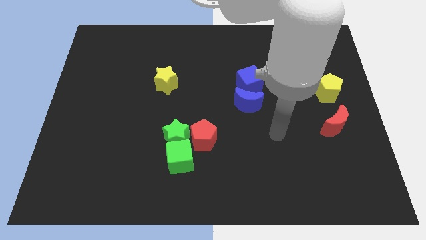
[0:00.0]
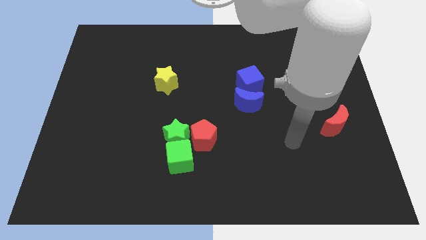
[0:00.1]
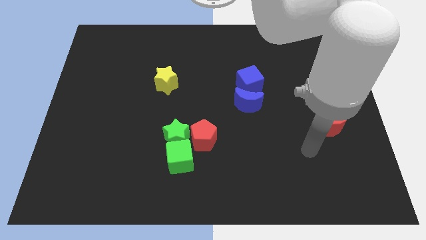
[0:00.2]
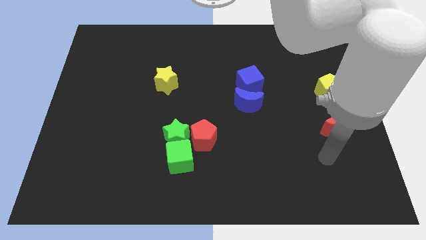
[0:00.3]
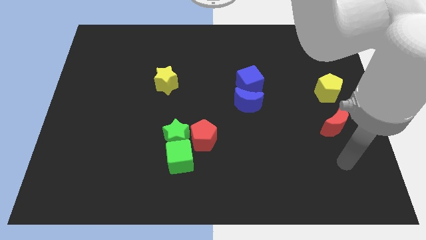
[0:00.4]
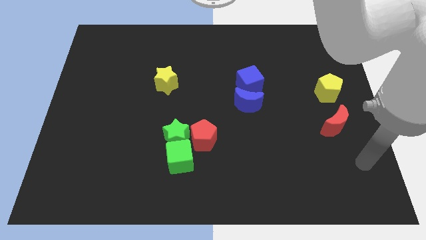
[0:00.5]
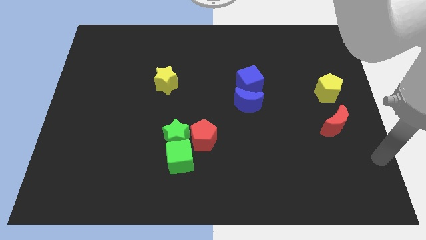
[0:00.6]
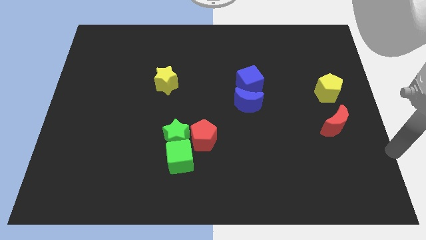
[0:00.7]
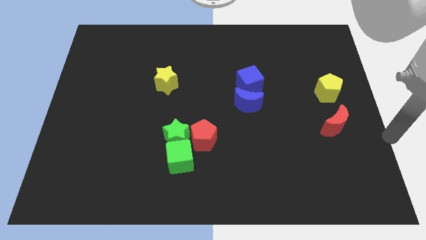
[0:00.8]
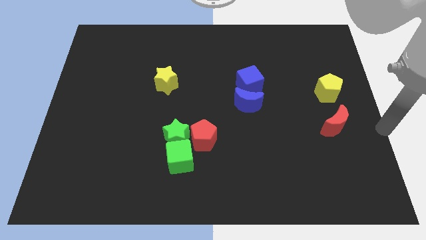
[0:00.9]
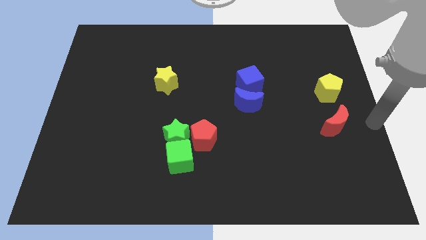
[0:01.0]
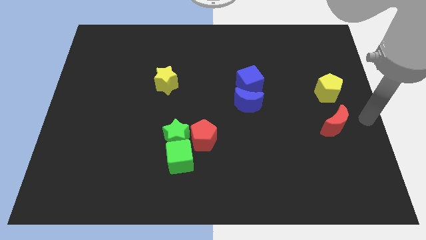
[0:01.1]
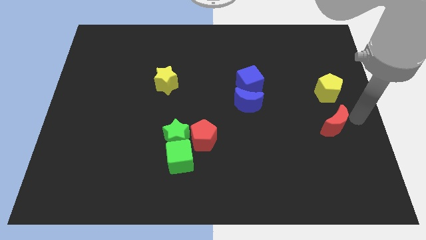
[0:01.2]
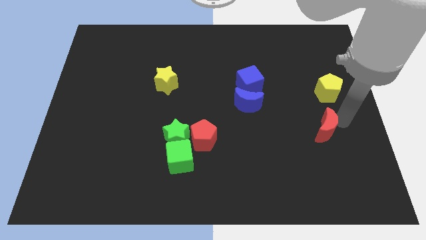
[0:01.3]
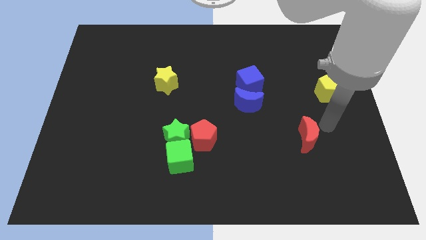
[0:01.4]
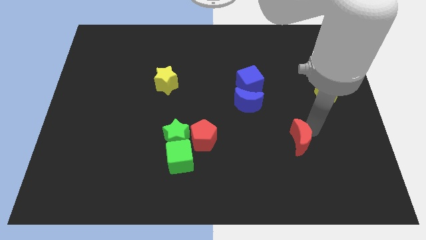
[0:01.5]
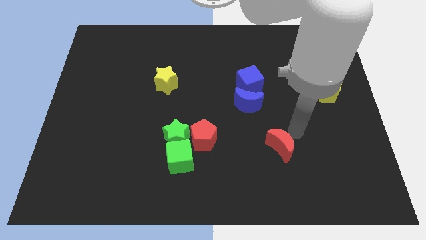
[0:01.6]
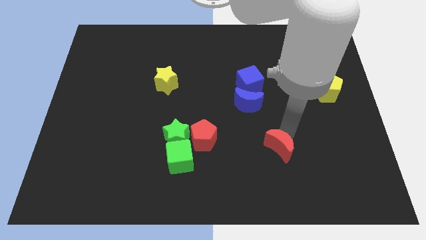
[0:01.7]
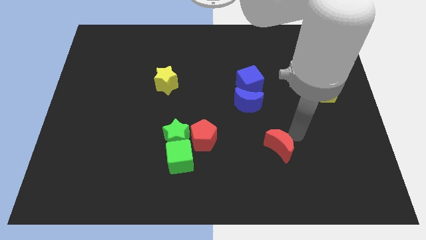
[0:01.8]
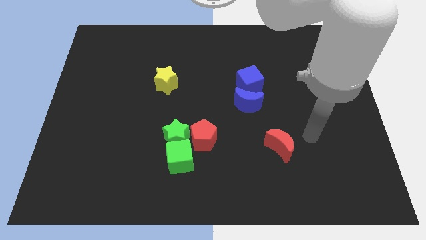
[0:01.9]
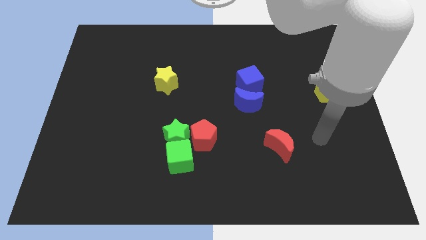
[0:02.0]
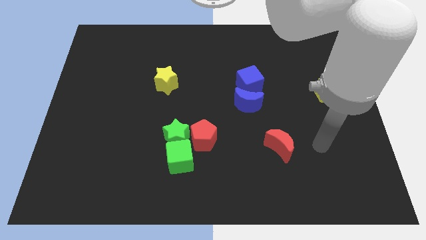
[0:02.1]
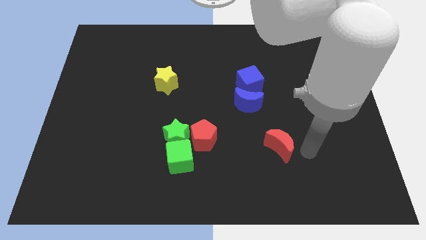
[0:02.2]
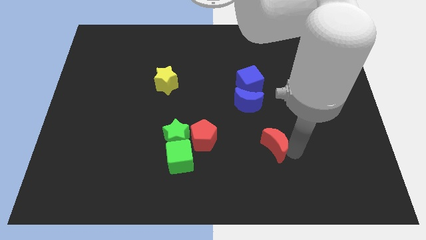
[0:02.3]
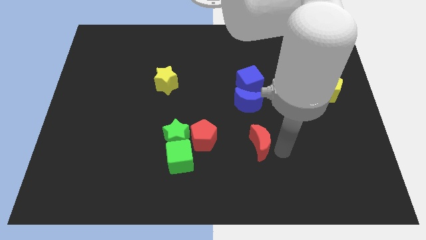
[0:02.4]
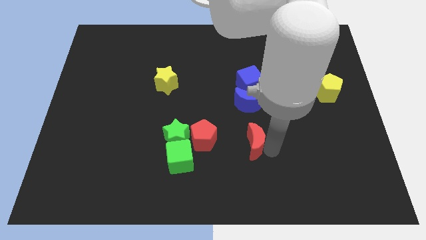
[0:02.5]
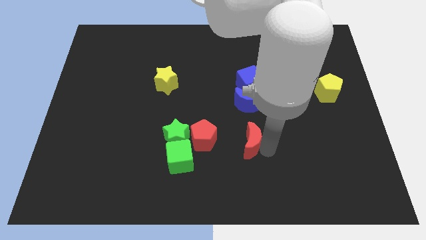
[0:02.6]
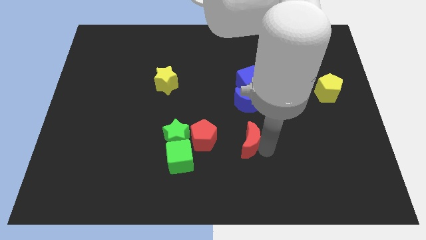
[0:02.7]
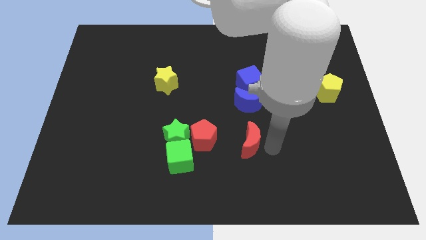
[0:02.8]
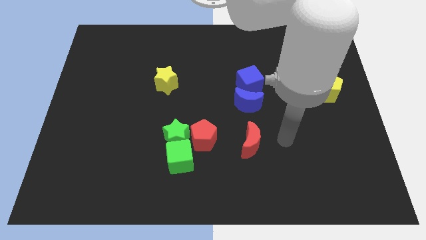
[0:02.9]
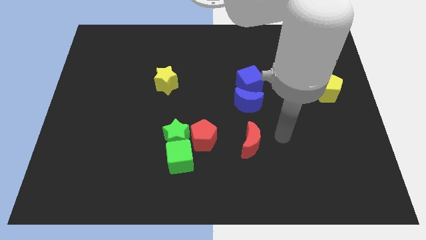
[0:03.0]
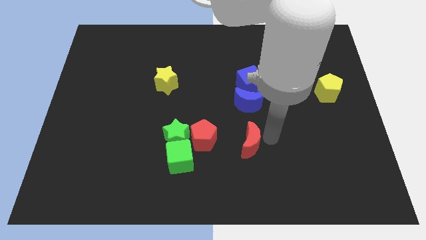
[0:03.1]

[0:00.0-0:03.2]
place red moon parallel right to red pentagon

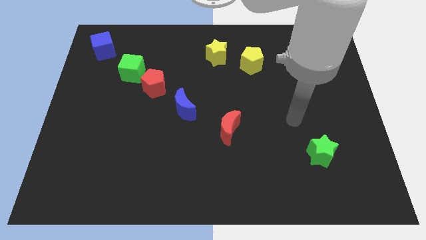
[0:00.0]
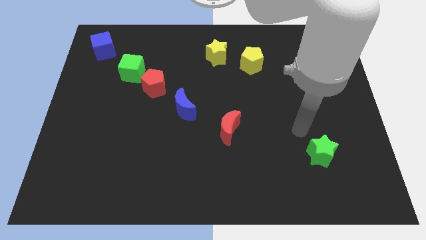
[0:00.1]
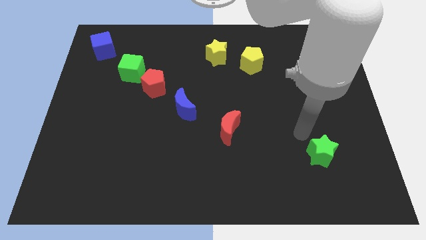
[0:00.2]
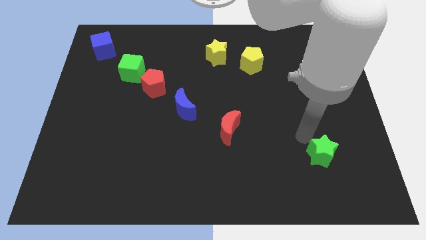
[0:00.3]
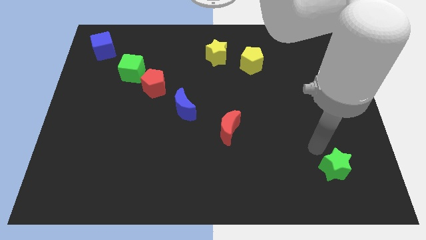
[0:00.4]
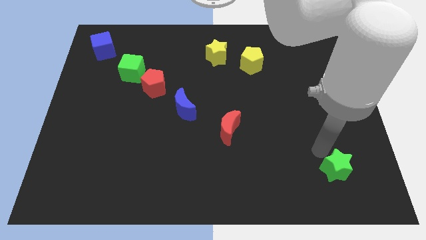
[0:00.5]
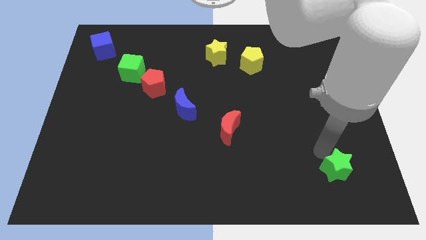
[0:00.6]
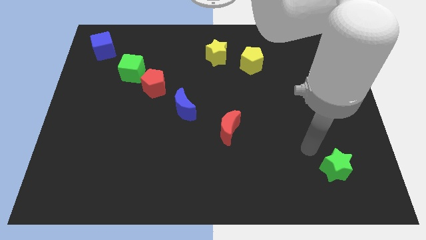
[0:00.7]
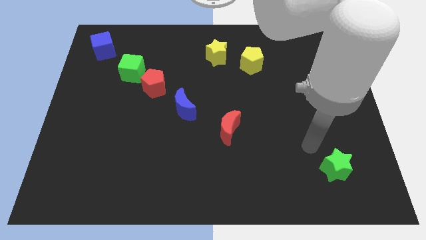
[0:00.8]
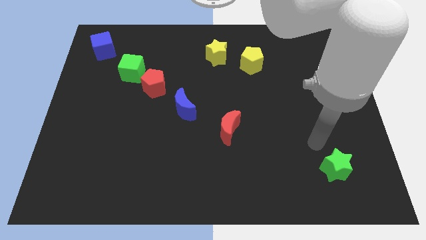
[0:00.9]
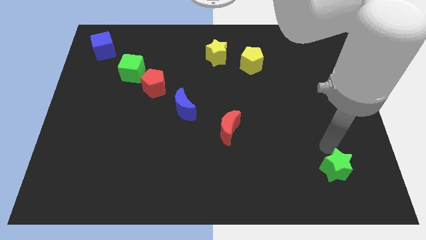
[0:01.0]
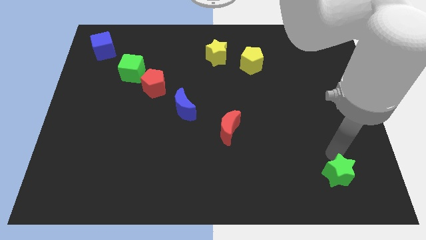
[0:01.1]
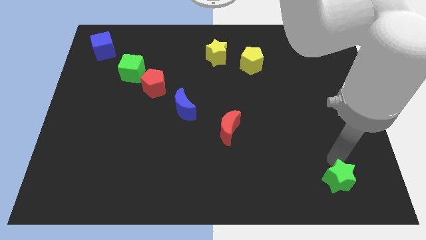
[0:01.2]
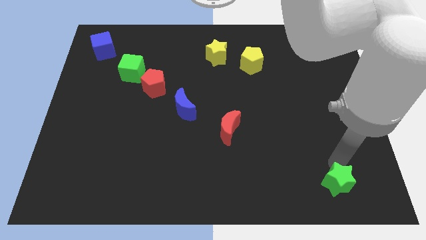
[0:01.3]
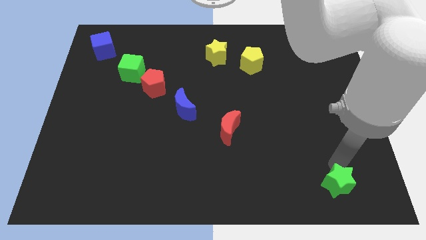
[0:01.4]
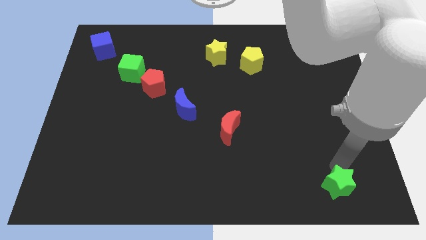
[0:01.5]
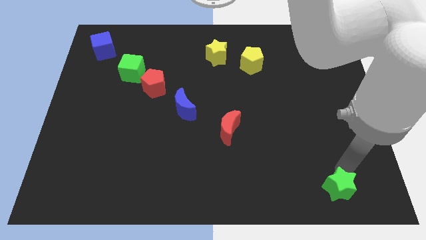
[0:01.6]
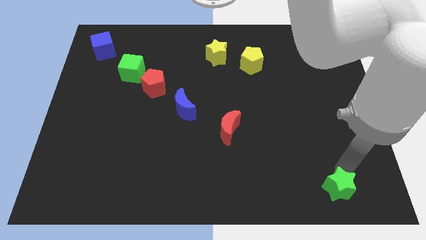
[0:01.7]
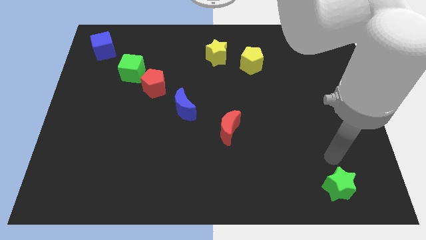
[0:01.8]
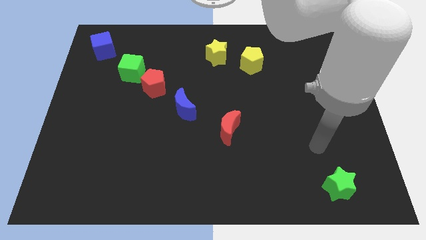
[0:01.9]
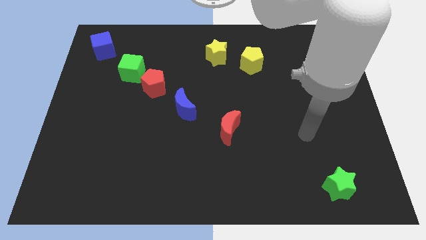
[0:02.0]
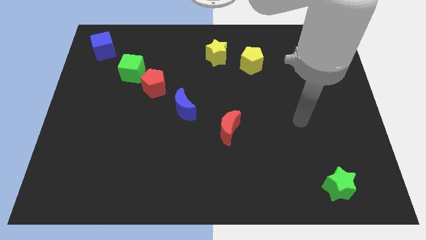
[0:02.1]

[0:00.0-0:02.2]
push the green star downward

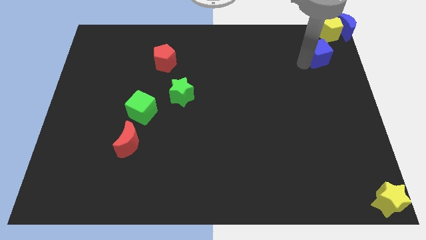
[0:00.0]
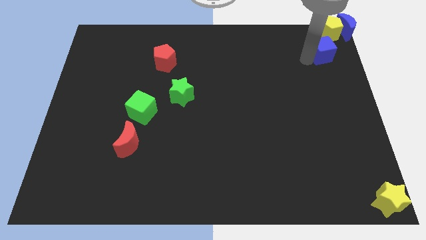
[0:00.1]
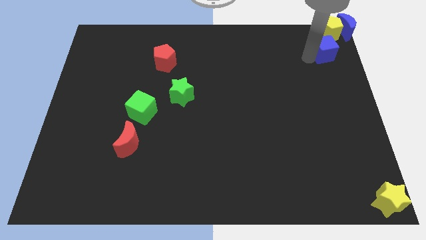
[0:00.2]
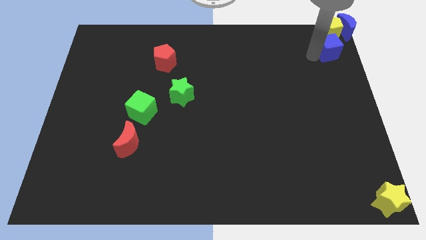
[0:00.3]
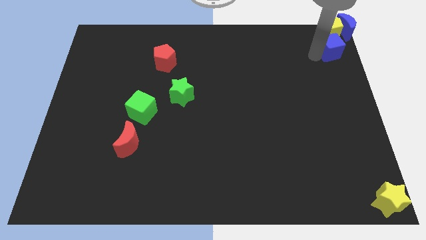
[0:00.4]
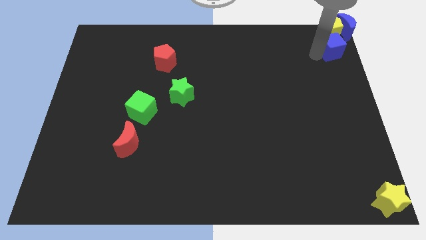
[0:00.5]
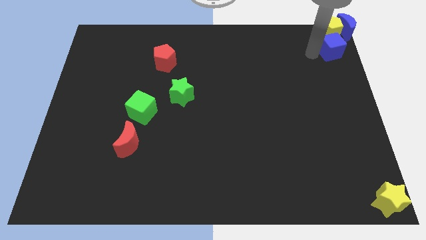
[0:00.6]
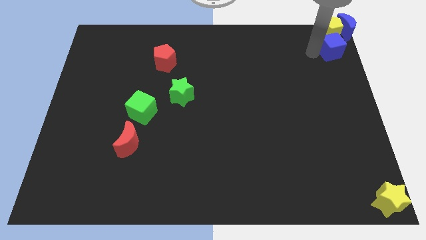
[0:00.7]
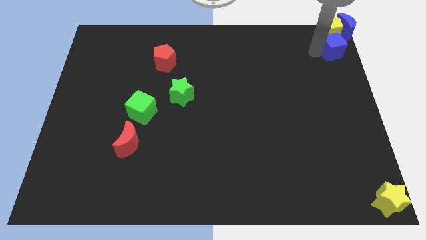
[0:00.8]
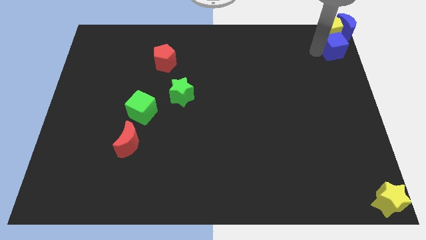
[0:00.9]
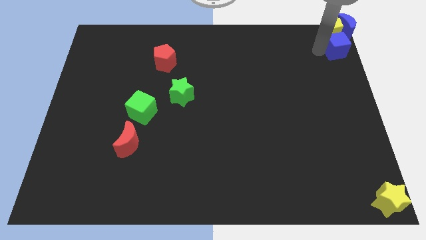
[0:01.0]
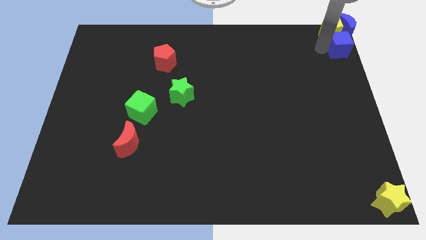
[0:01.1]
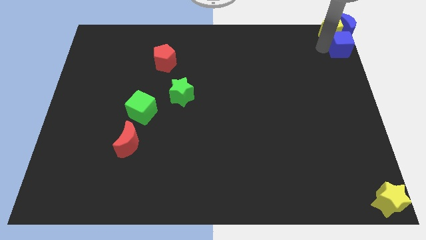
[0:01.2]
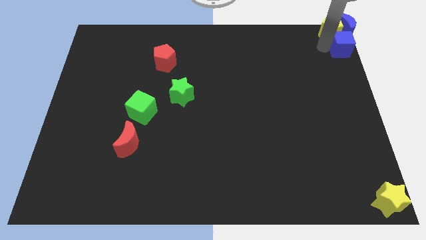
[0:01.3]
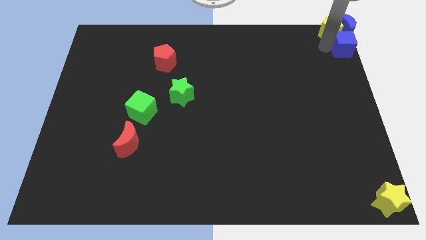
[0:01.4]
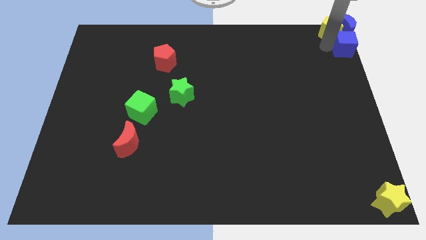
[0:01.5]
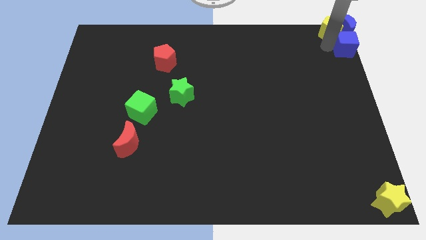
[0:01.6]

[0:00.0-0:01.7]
move the blue cube to the bottom of the yellow pentagon

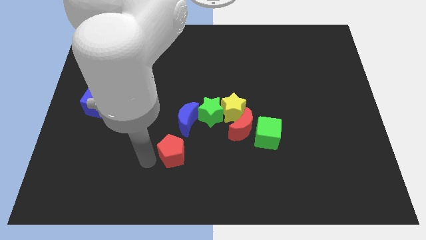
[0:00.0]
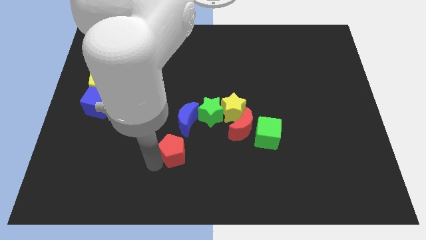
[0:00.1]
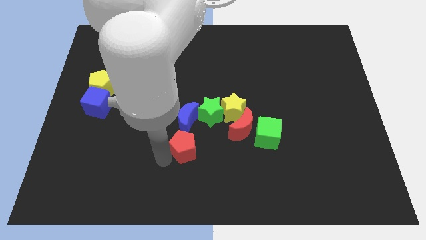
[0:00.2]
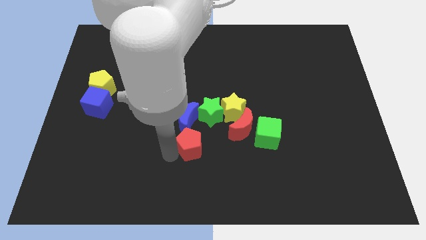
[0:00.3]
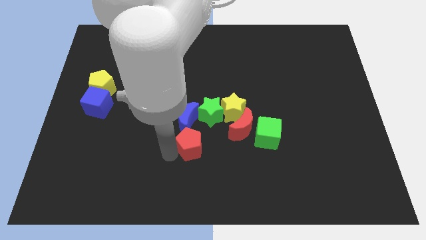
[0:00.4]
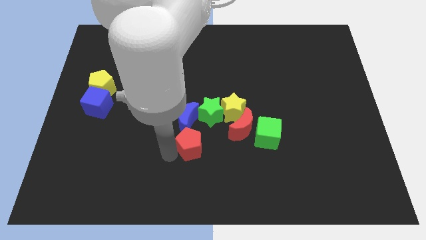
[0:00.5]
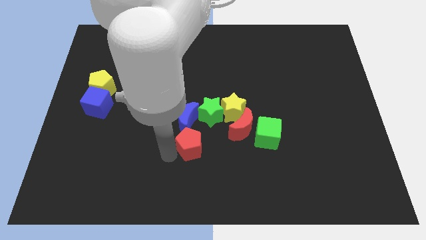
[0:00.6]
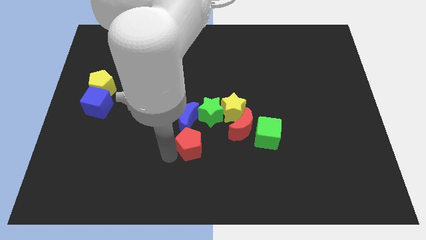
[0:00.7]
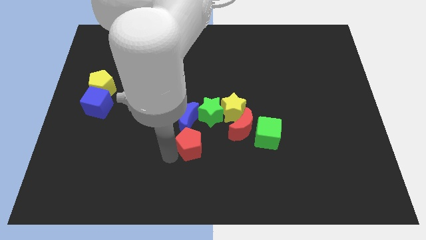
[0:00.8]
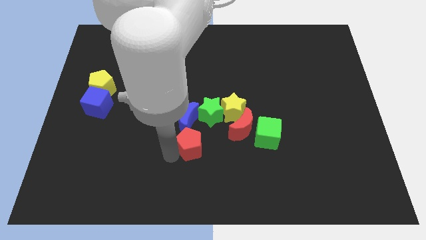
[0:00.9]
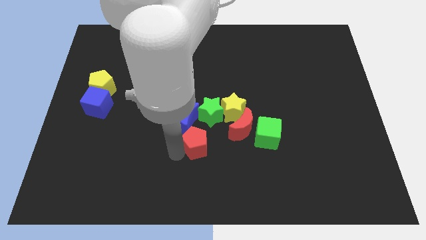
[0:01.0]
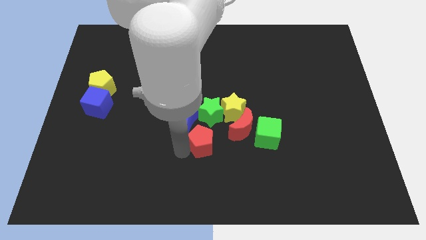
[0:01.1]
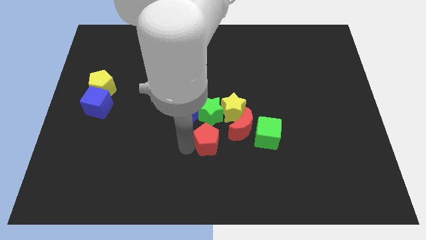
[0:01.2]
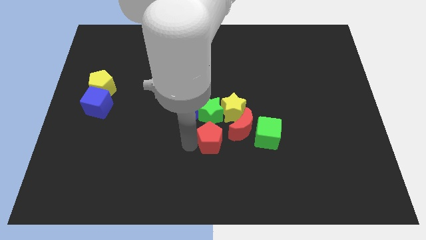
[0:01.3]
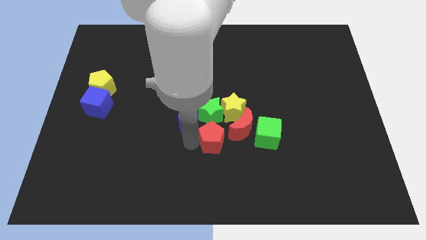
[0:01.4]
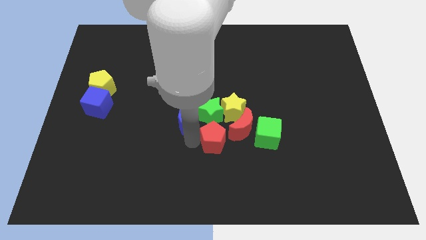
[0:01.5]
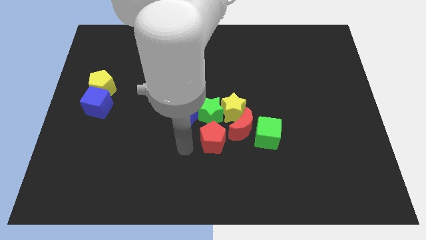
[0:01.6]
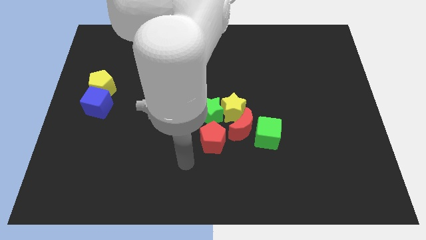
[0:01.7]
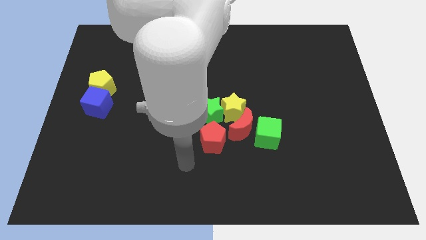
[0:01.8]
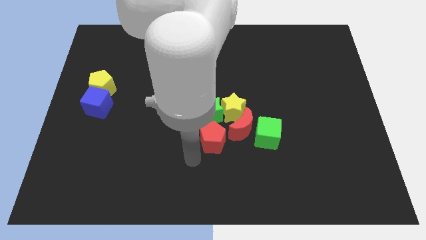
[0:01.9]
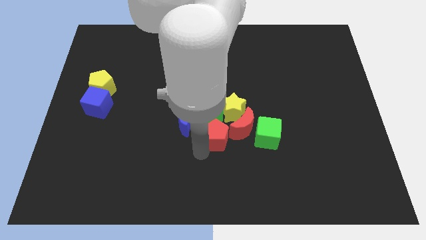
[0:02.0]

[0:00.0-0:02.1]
push the red pentagon into the red crescent
